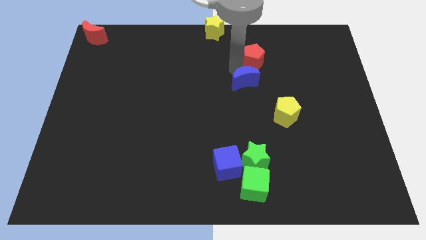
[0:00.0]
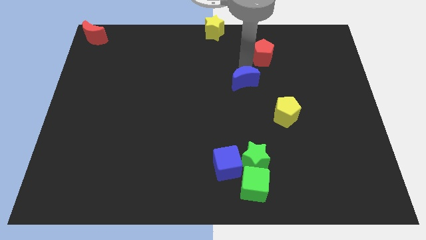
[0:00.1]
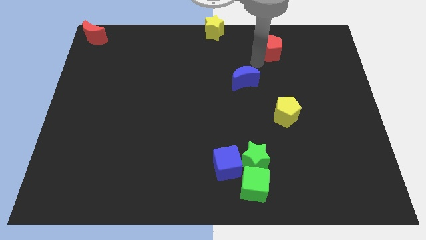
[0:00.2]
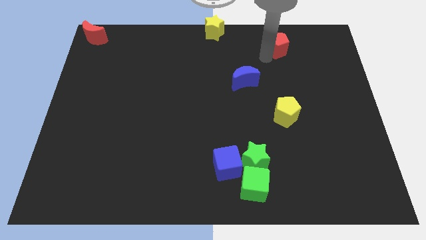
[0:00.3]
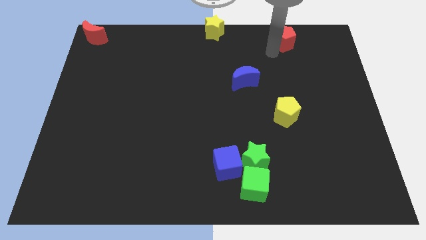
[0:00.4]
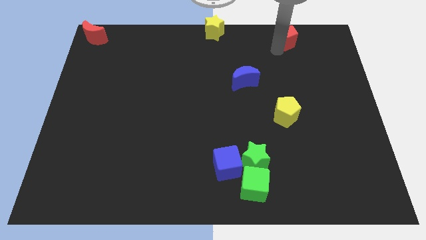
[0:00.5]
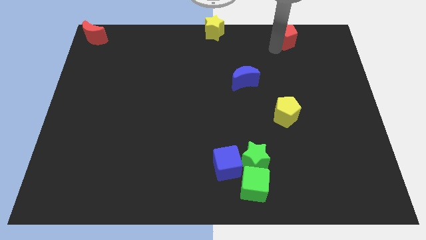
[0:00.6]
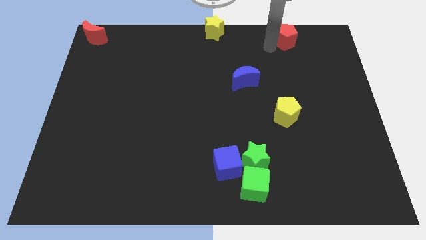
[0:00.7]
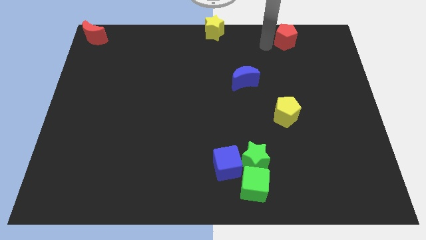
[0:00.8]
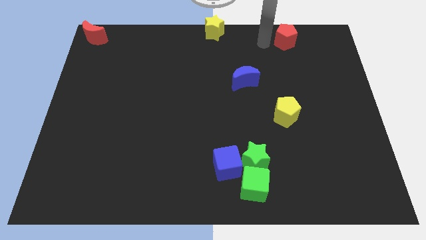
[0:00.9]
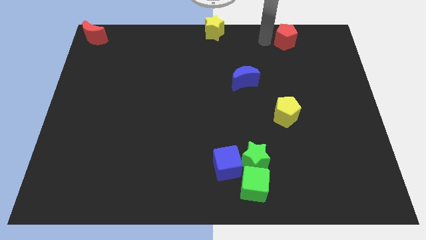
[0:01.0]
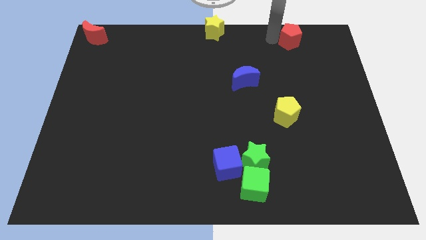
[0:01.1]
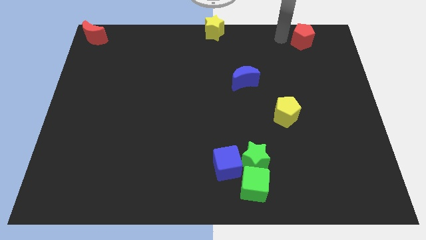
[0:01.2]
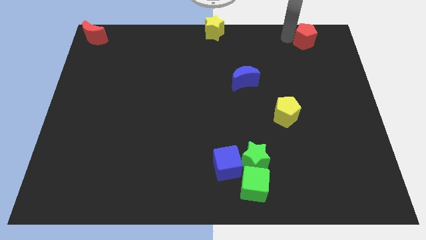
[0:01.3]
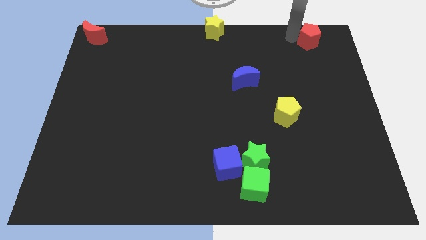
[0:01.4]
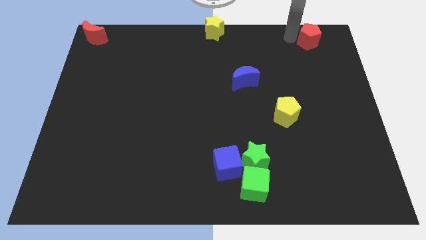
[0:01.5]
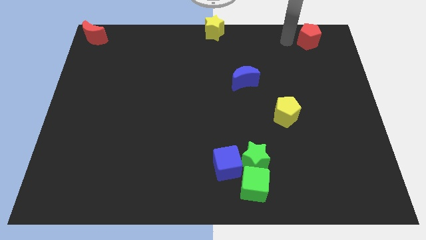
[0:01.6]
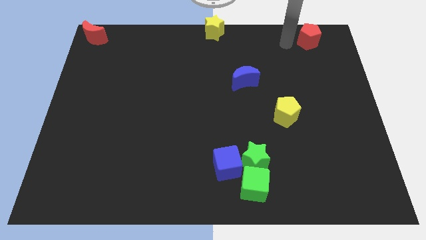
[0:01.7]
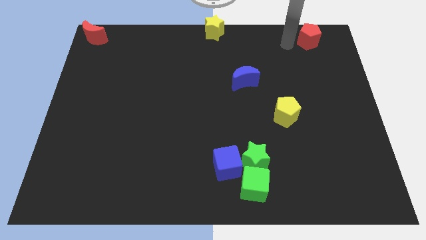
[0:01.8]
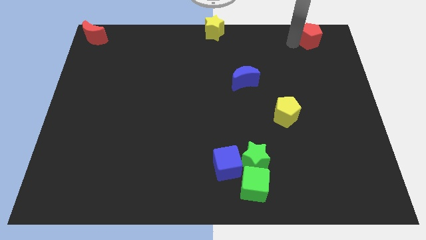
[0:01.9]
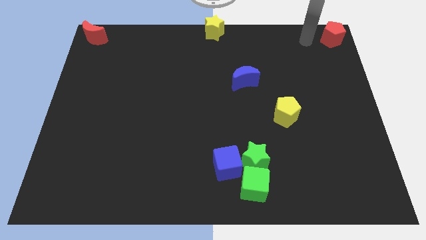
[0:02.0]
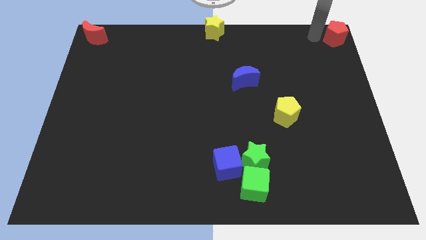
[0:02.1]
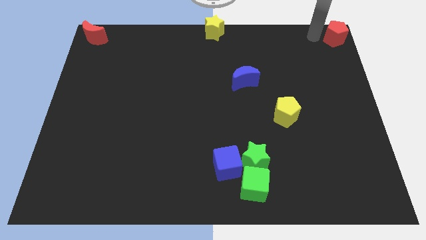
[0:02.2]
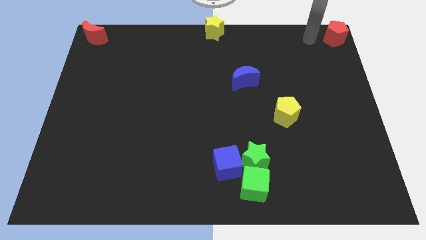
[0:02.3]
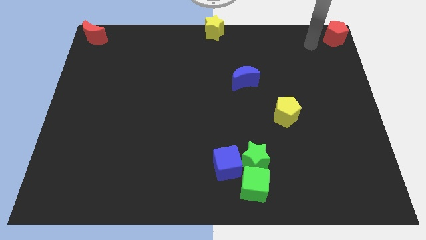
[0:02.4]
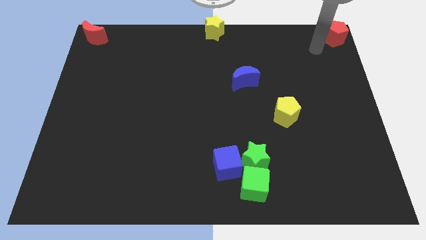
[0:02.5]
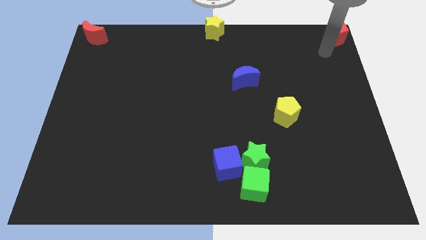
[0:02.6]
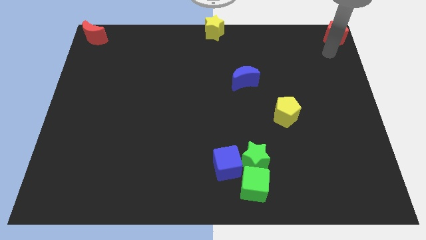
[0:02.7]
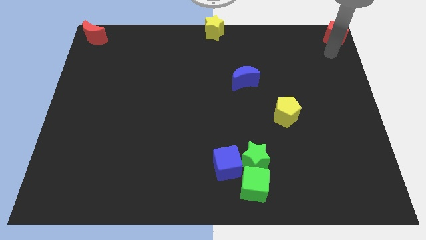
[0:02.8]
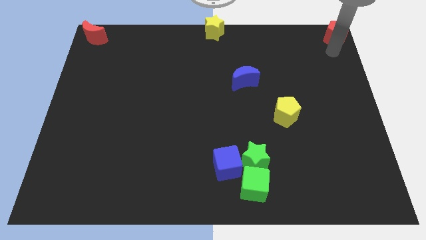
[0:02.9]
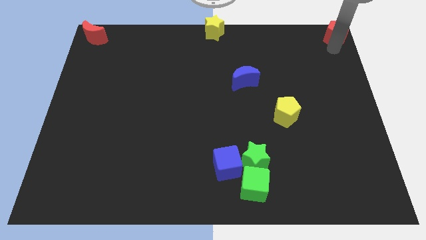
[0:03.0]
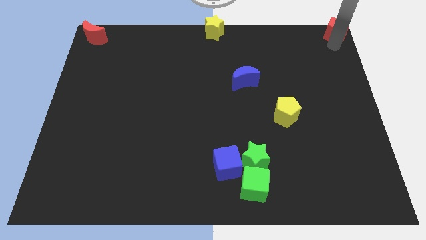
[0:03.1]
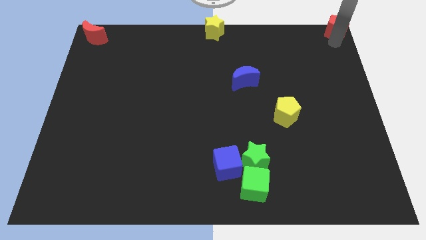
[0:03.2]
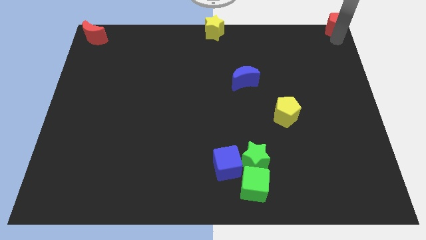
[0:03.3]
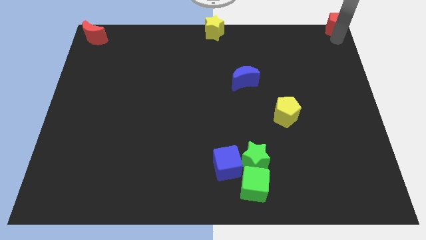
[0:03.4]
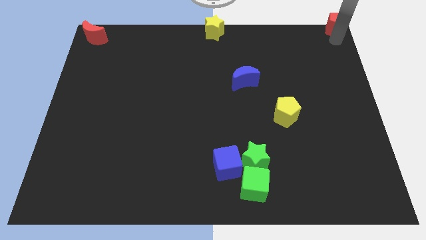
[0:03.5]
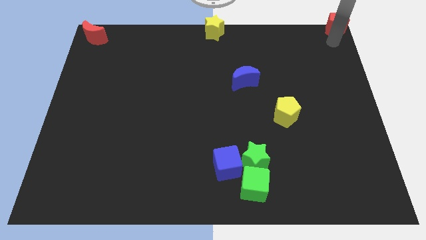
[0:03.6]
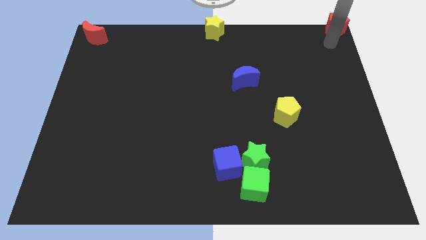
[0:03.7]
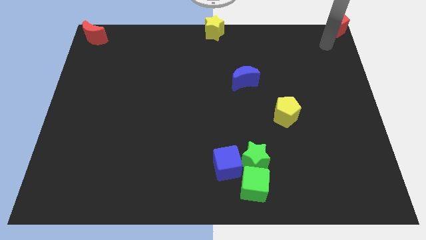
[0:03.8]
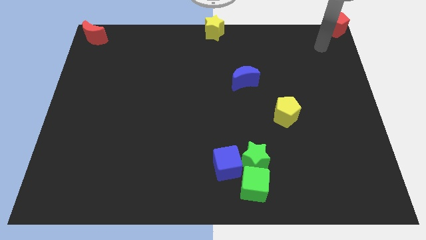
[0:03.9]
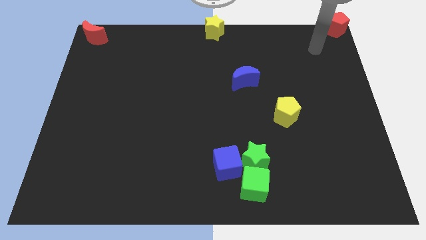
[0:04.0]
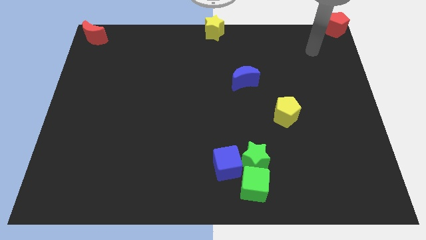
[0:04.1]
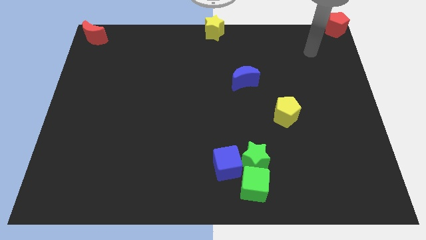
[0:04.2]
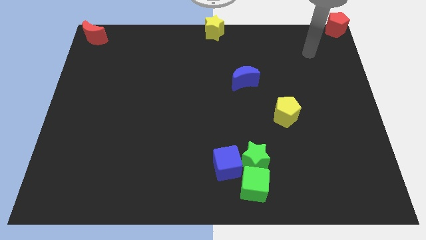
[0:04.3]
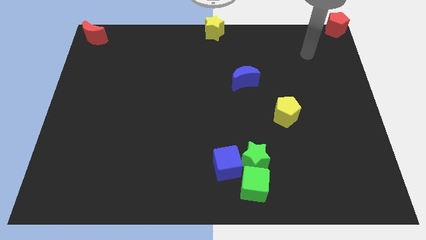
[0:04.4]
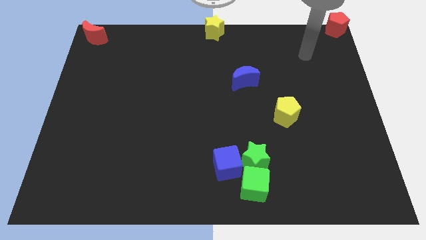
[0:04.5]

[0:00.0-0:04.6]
push the red pentagon to the top right

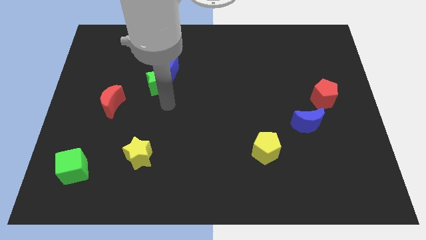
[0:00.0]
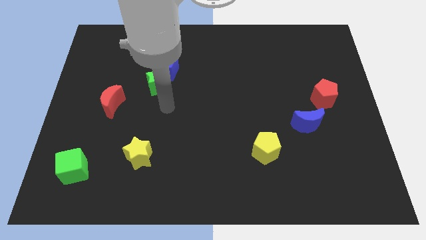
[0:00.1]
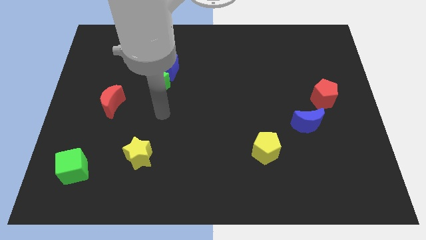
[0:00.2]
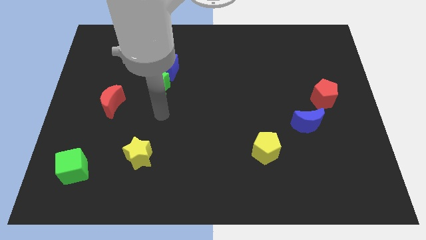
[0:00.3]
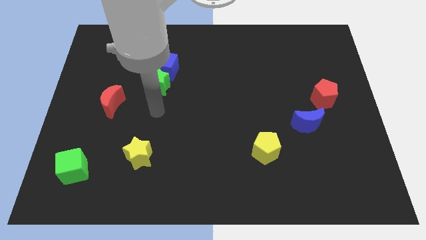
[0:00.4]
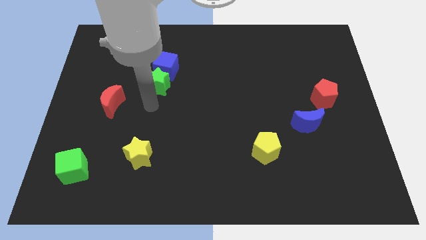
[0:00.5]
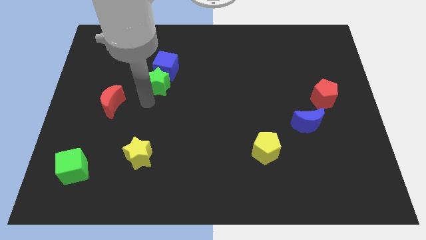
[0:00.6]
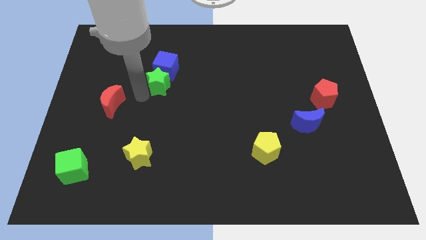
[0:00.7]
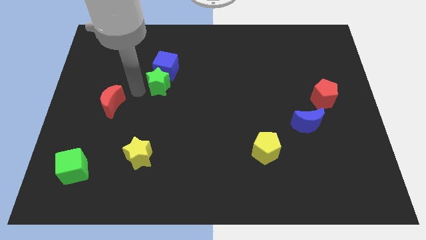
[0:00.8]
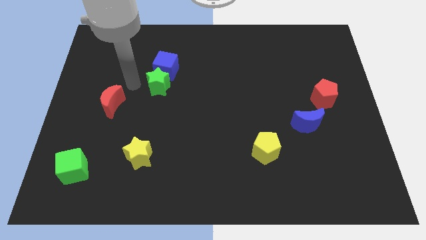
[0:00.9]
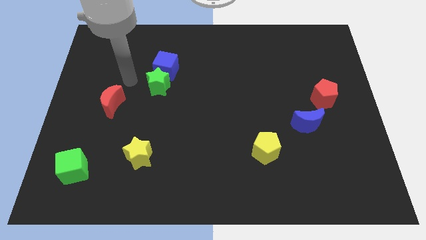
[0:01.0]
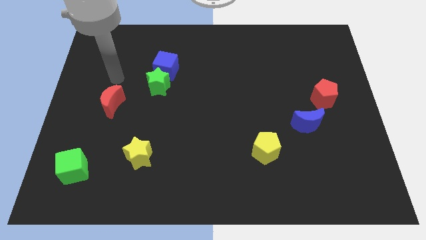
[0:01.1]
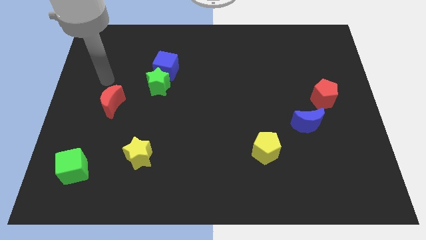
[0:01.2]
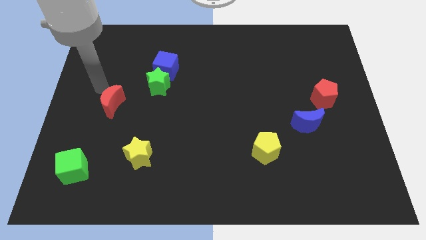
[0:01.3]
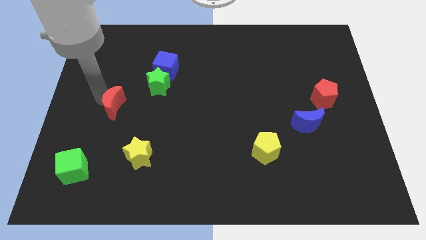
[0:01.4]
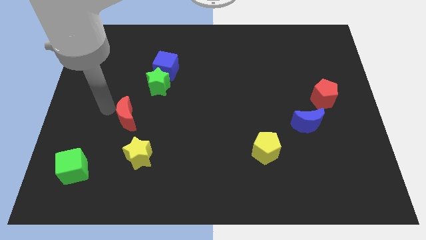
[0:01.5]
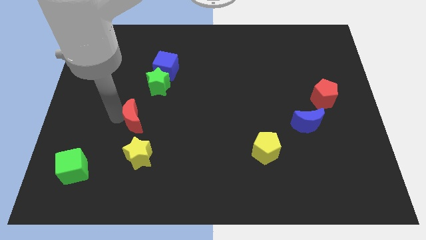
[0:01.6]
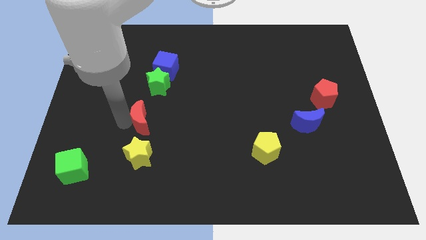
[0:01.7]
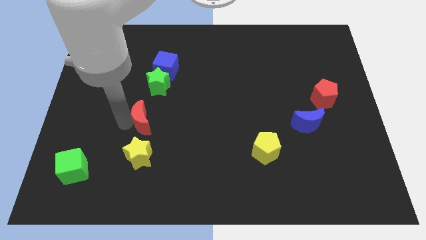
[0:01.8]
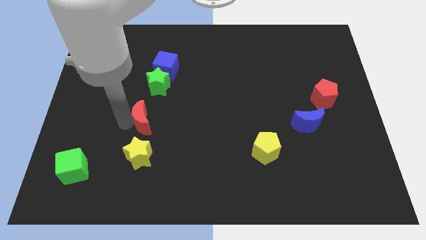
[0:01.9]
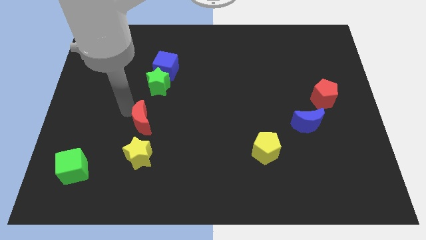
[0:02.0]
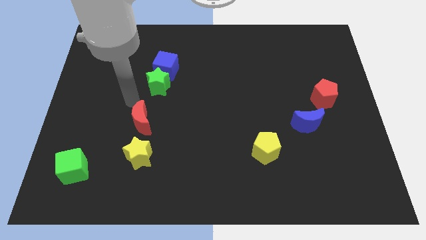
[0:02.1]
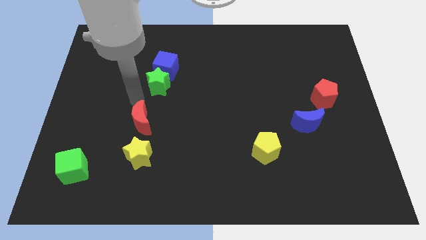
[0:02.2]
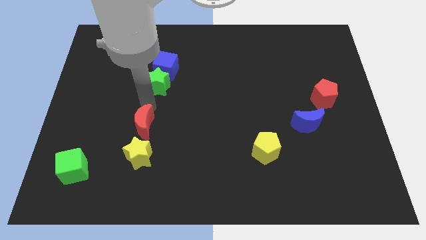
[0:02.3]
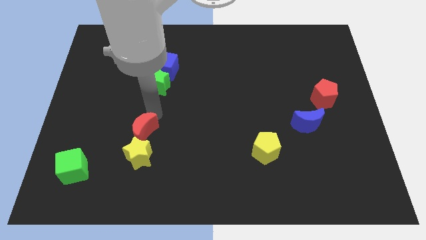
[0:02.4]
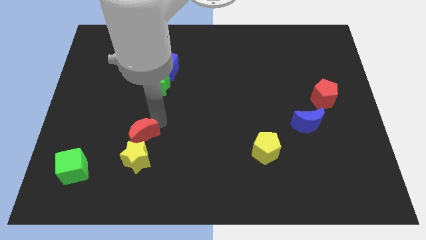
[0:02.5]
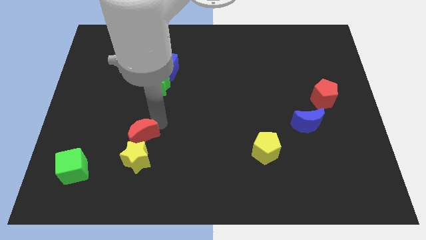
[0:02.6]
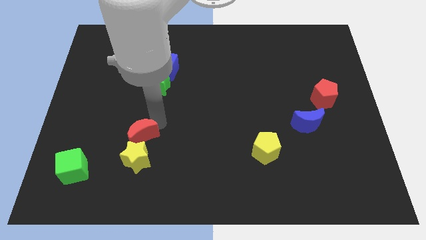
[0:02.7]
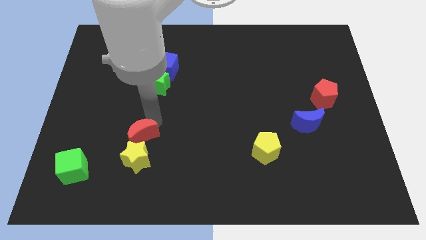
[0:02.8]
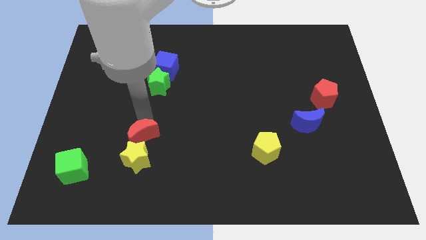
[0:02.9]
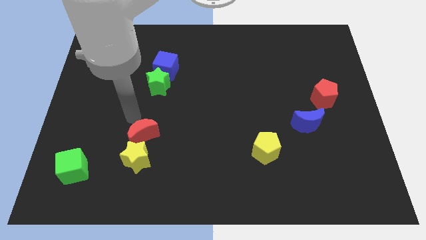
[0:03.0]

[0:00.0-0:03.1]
push the red crescent to the top of the yellow star

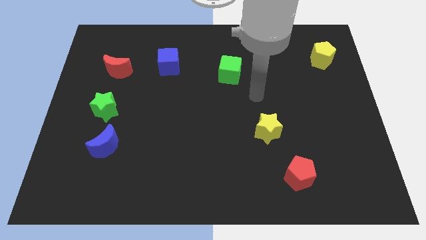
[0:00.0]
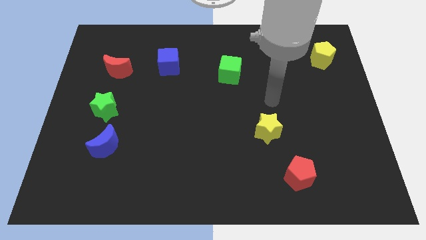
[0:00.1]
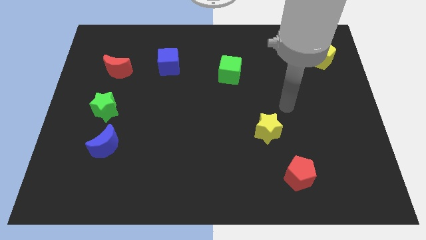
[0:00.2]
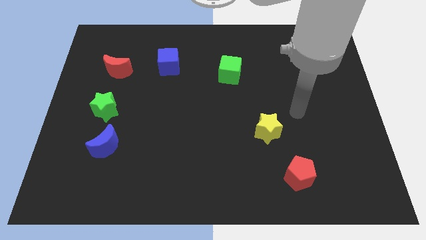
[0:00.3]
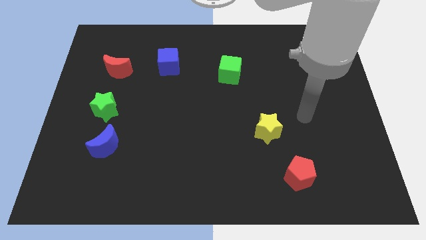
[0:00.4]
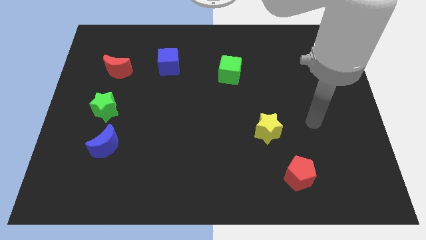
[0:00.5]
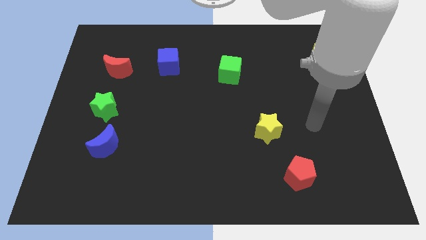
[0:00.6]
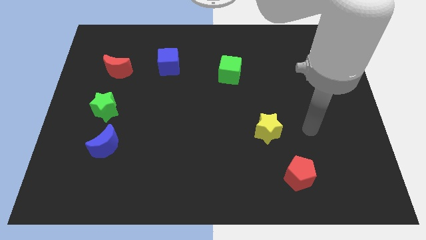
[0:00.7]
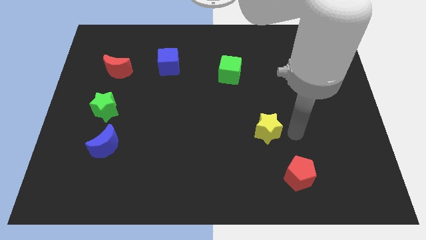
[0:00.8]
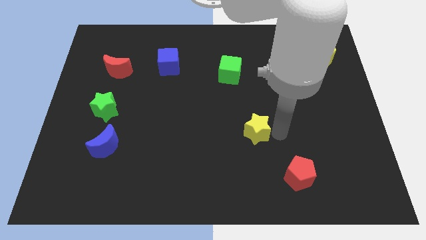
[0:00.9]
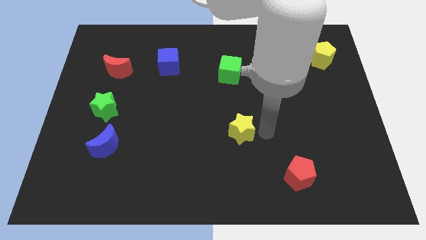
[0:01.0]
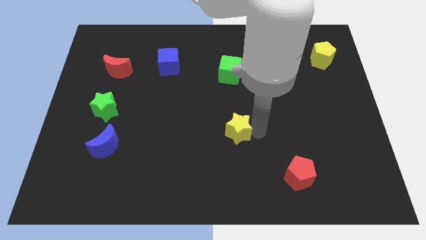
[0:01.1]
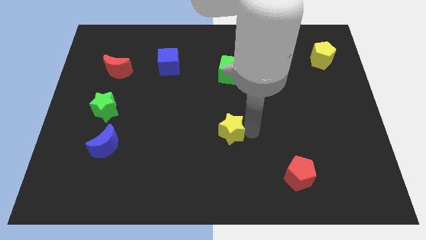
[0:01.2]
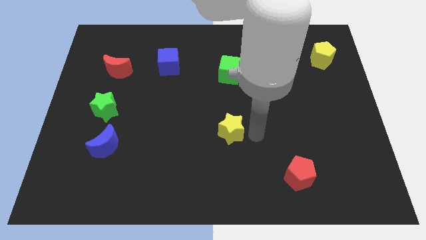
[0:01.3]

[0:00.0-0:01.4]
place the yellow star to the bottom of green cube
